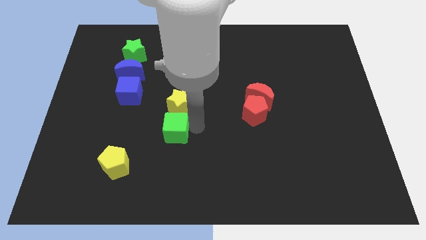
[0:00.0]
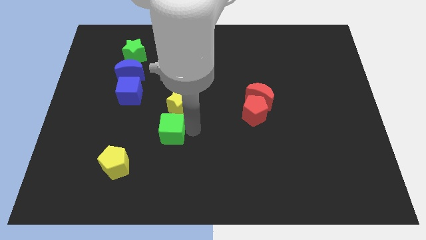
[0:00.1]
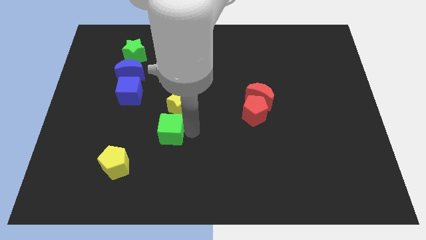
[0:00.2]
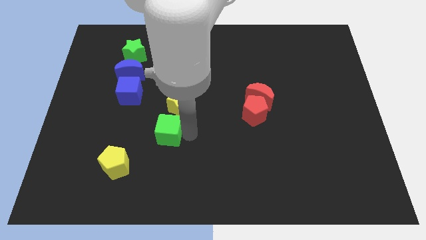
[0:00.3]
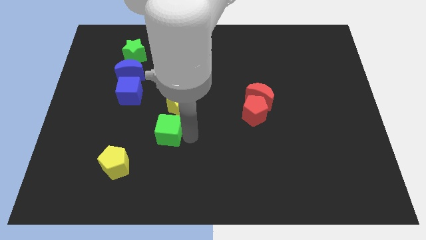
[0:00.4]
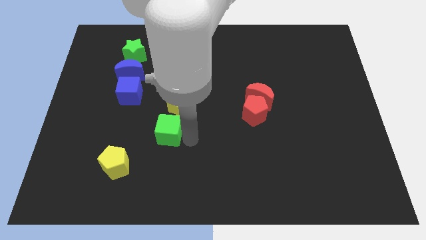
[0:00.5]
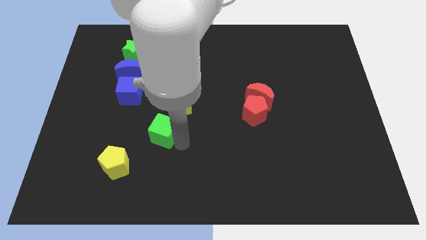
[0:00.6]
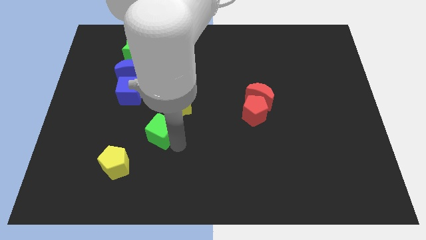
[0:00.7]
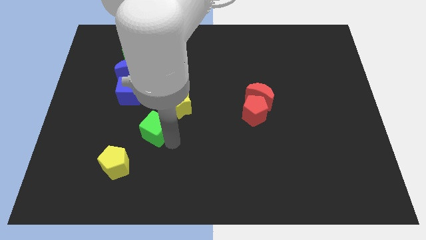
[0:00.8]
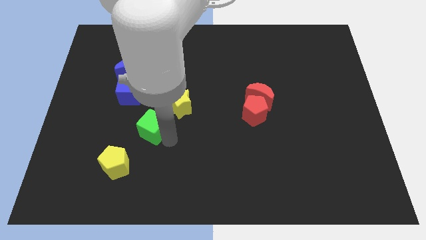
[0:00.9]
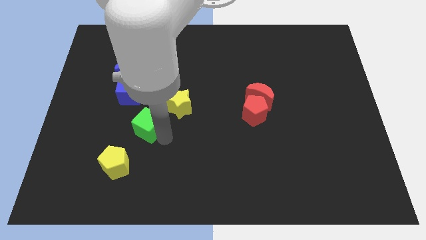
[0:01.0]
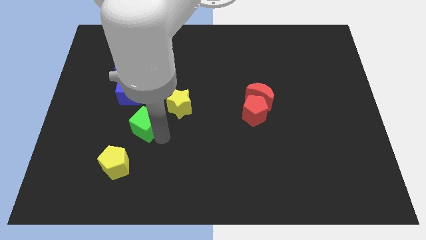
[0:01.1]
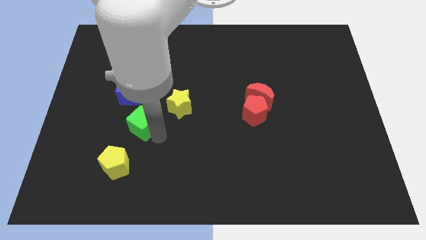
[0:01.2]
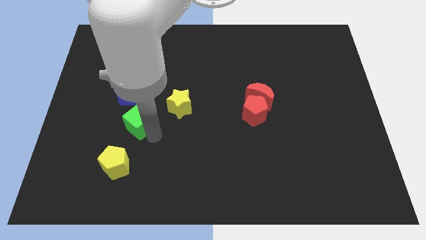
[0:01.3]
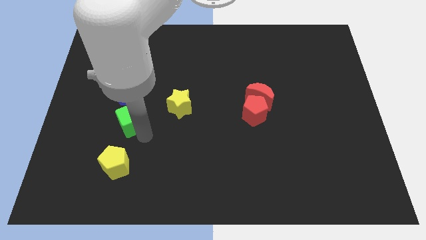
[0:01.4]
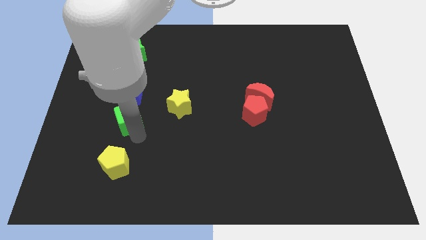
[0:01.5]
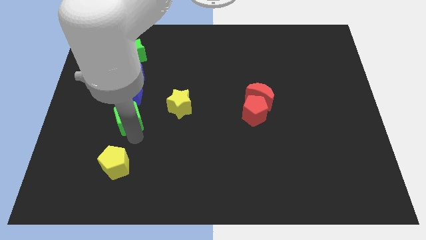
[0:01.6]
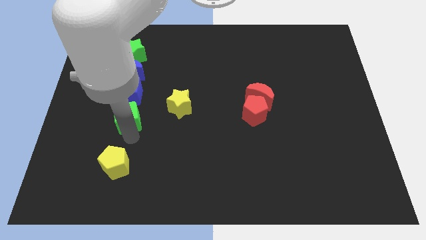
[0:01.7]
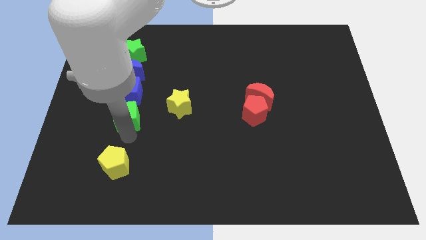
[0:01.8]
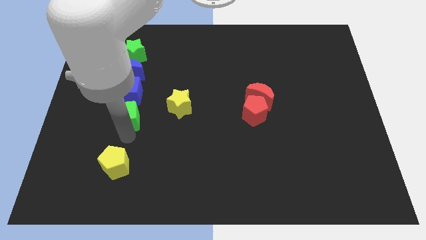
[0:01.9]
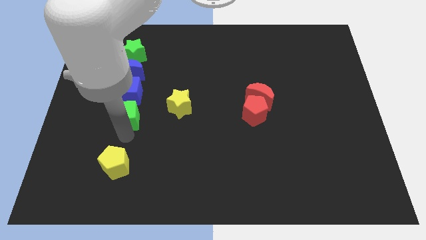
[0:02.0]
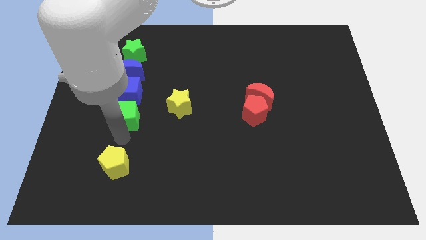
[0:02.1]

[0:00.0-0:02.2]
move the green cube close to the blue cube

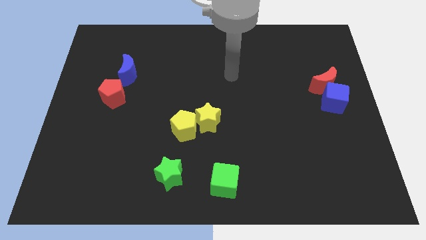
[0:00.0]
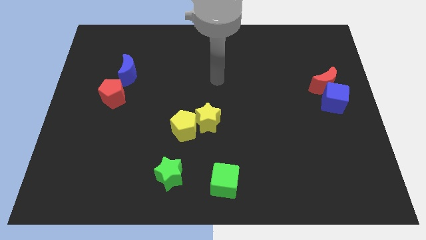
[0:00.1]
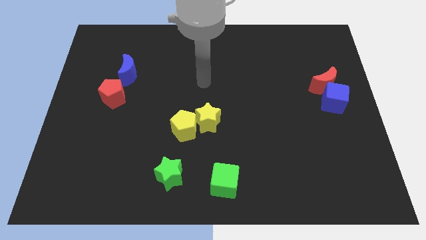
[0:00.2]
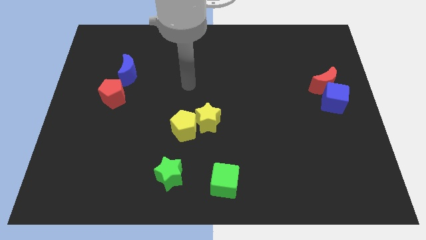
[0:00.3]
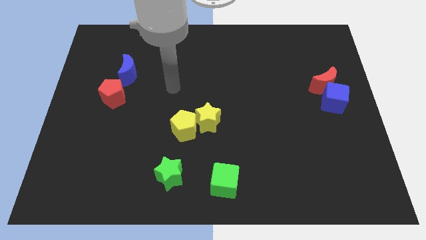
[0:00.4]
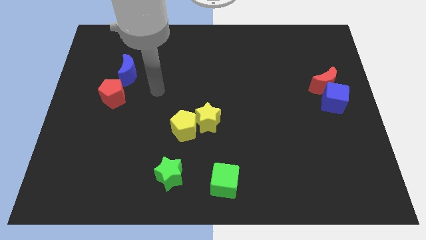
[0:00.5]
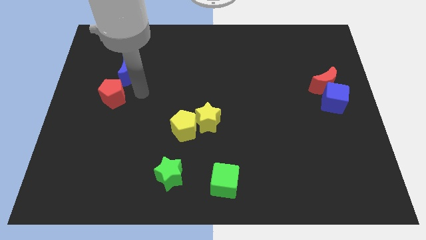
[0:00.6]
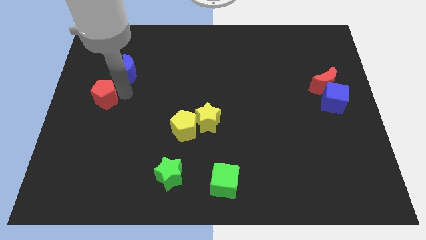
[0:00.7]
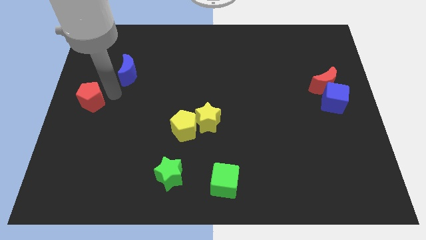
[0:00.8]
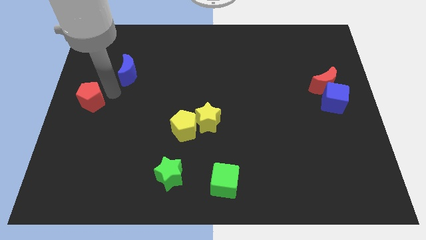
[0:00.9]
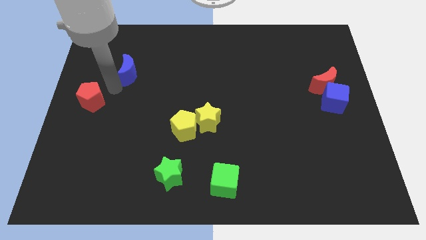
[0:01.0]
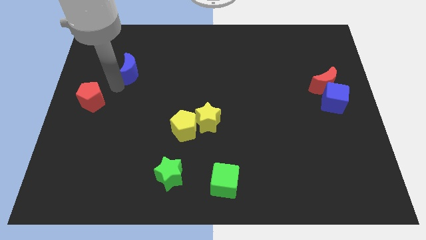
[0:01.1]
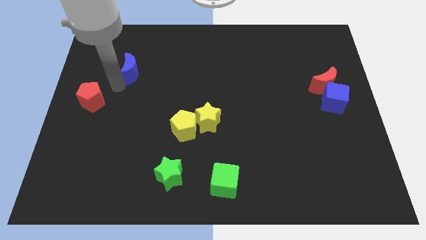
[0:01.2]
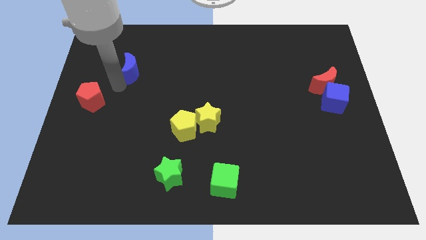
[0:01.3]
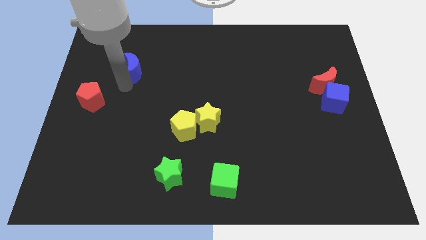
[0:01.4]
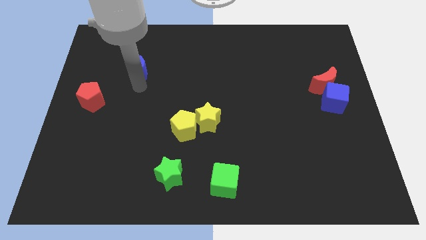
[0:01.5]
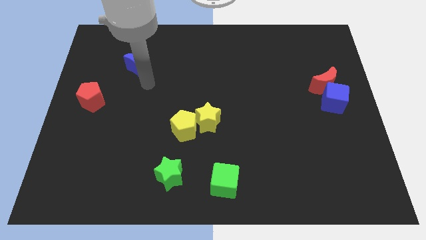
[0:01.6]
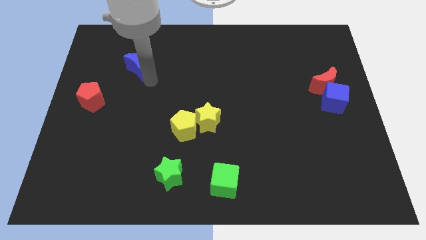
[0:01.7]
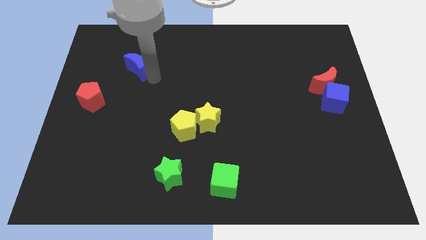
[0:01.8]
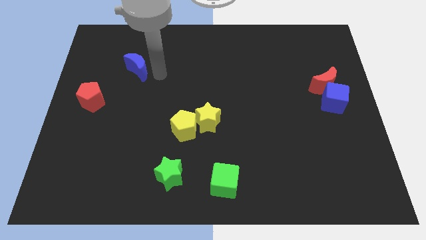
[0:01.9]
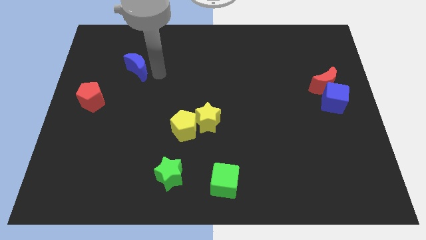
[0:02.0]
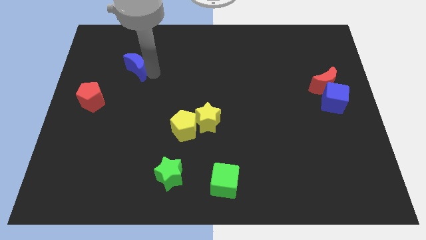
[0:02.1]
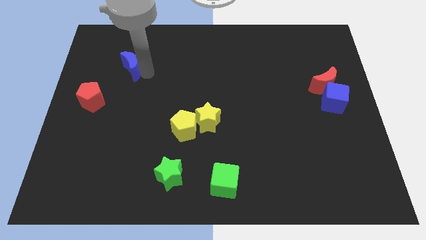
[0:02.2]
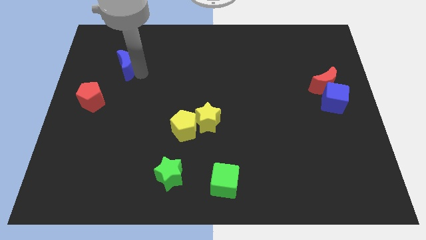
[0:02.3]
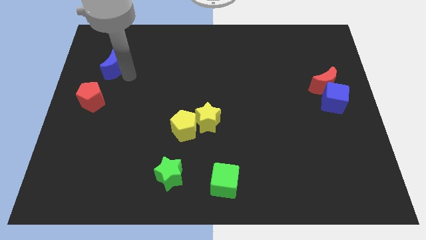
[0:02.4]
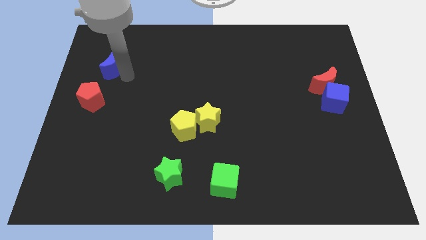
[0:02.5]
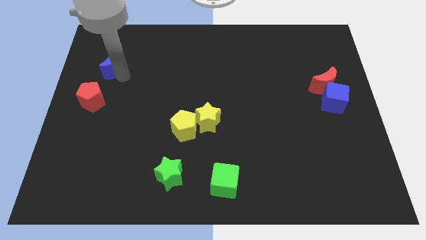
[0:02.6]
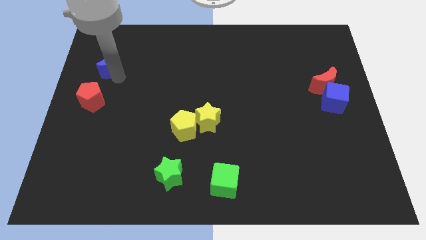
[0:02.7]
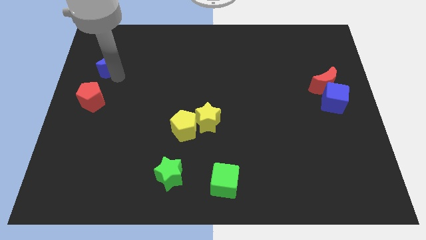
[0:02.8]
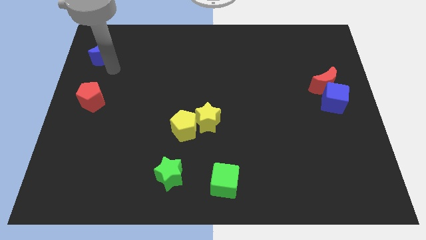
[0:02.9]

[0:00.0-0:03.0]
place blue crescent above red pentagon

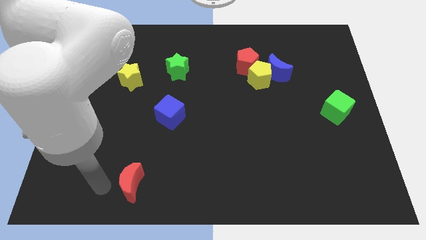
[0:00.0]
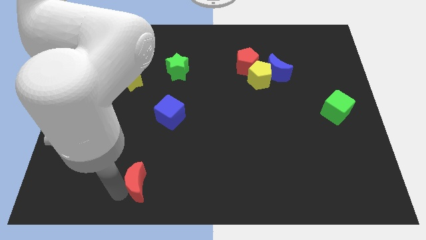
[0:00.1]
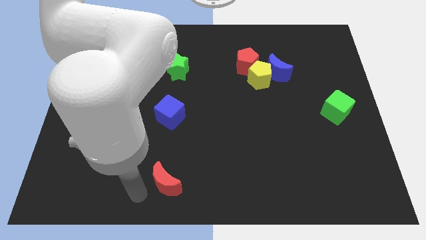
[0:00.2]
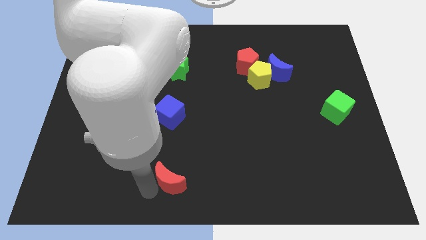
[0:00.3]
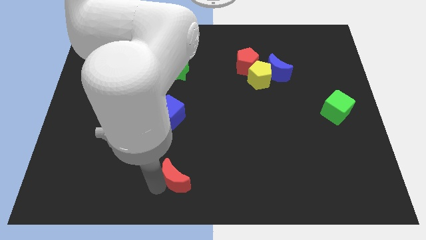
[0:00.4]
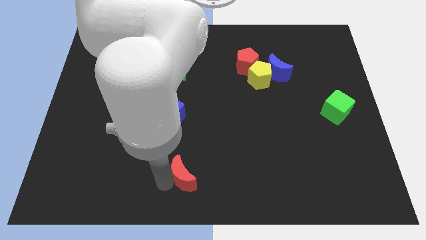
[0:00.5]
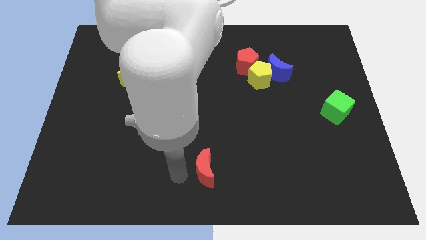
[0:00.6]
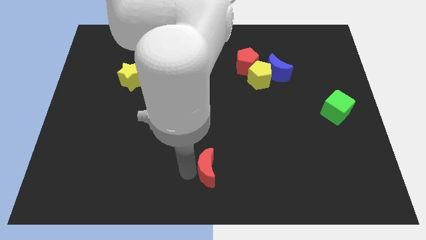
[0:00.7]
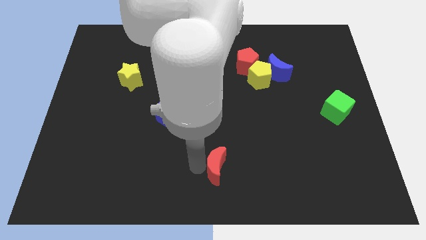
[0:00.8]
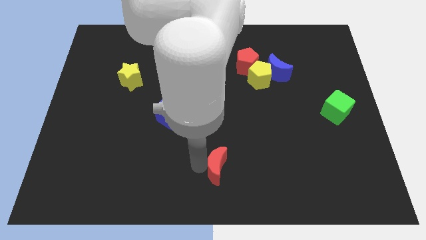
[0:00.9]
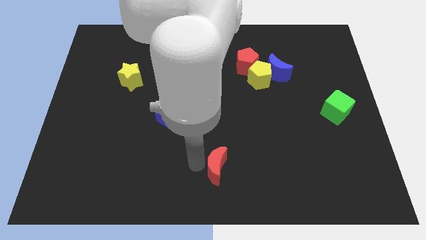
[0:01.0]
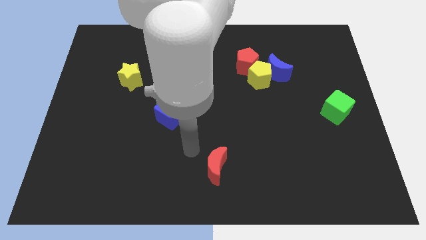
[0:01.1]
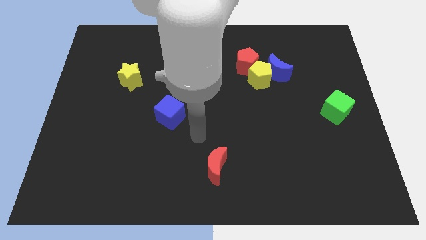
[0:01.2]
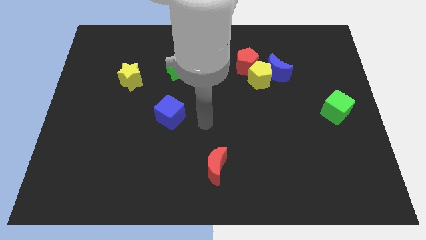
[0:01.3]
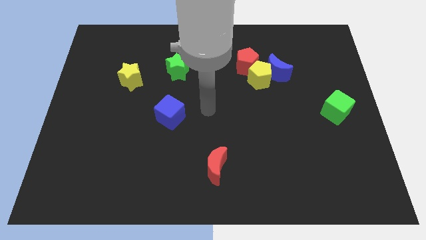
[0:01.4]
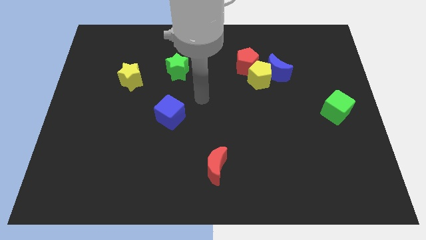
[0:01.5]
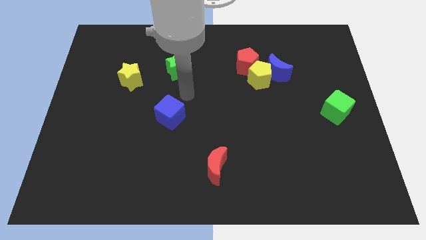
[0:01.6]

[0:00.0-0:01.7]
push the red moon to the right

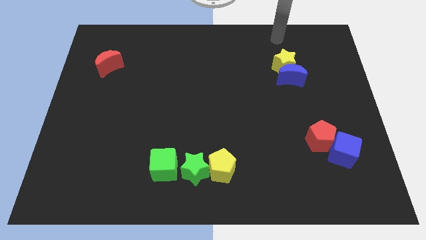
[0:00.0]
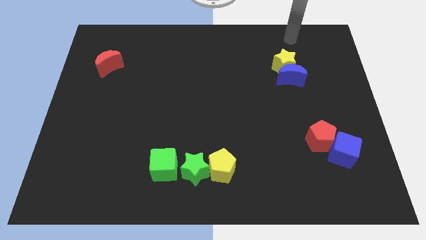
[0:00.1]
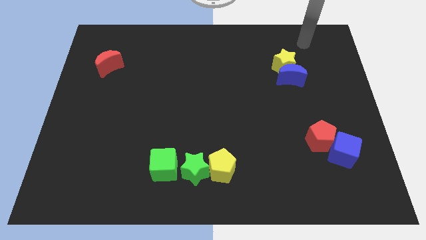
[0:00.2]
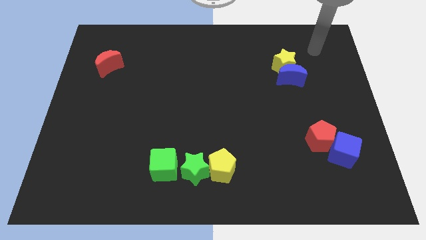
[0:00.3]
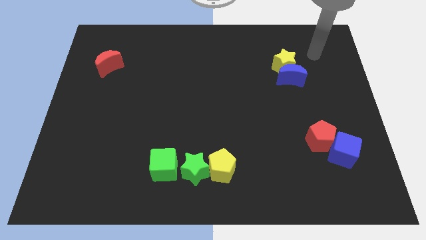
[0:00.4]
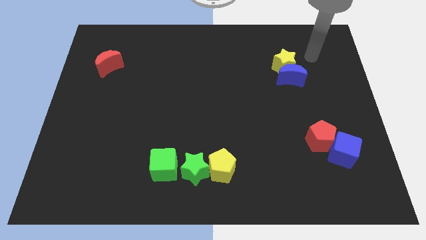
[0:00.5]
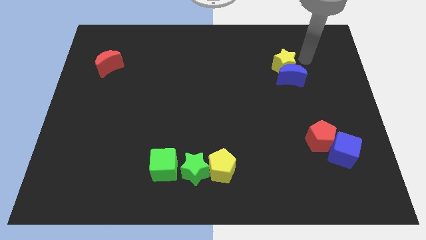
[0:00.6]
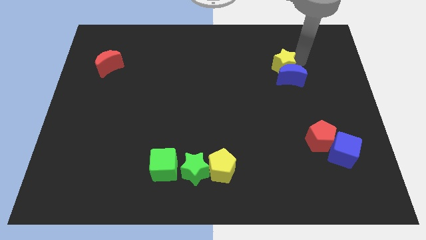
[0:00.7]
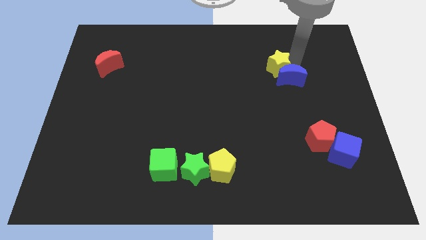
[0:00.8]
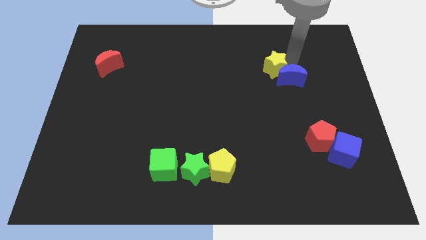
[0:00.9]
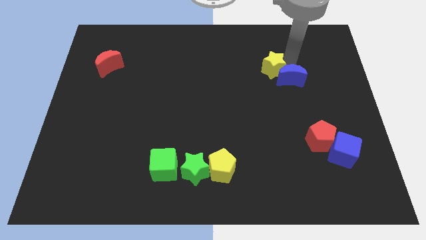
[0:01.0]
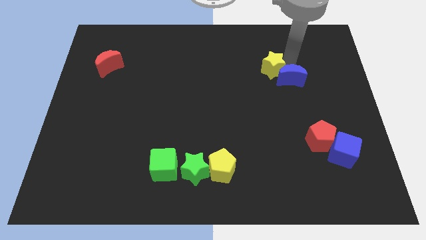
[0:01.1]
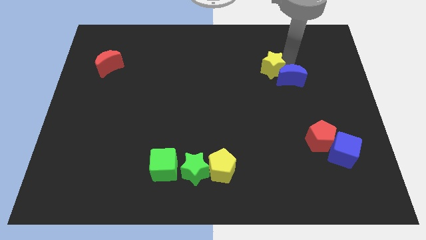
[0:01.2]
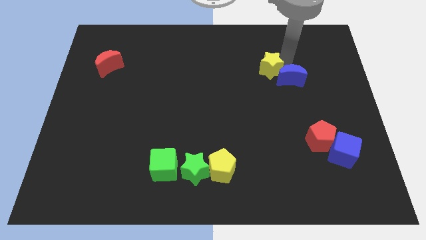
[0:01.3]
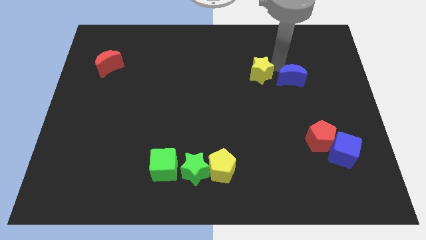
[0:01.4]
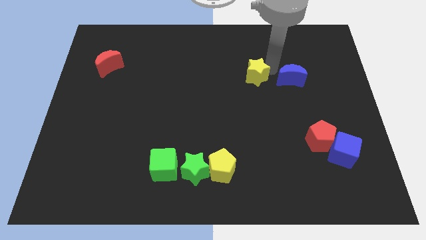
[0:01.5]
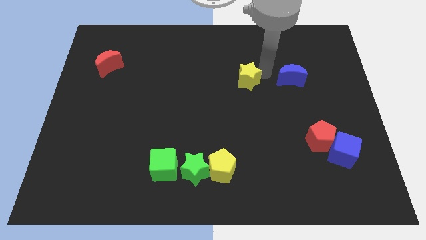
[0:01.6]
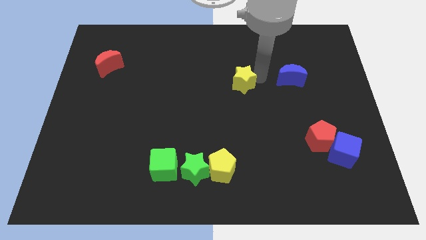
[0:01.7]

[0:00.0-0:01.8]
separate the yellow star from the blue moon

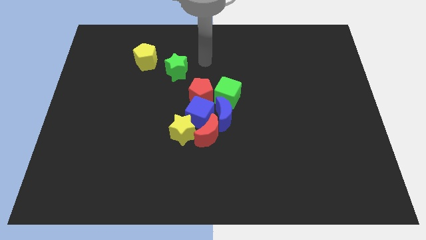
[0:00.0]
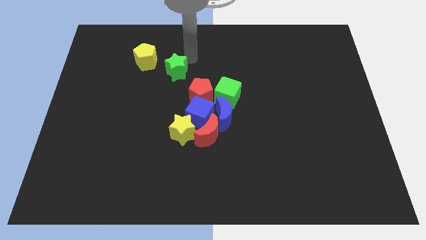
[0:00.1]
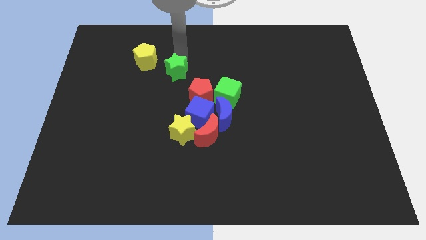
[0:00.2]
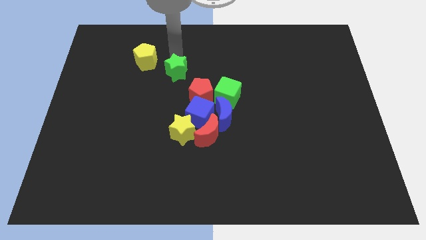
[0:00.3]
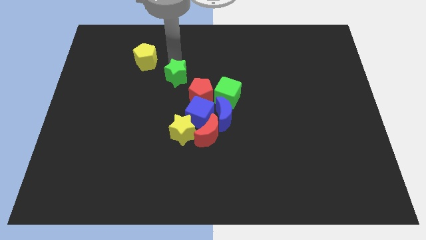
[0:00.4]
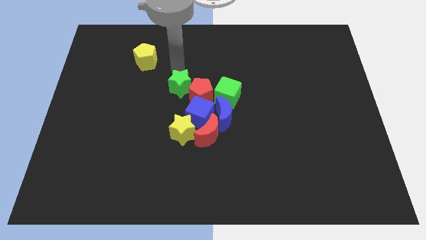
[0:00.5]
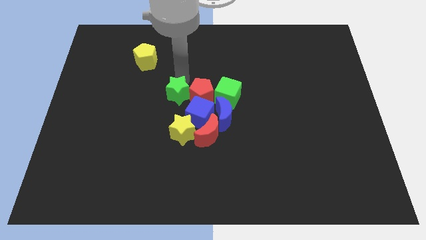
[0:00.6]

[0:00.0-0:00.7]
push the green star close to the left of the red pentagon
